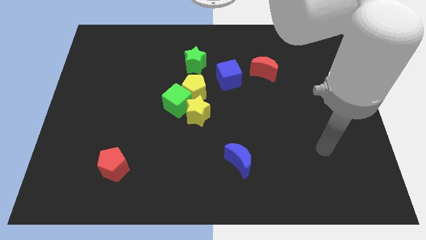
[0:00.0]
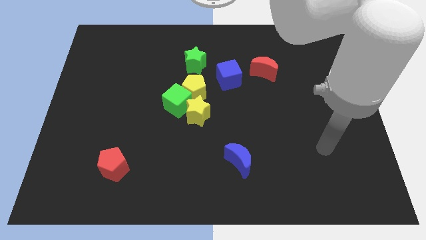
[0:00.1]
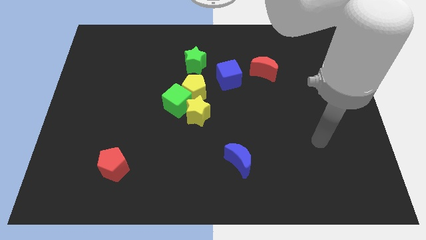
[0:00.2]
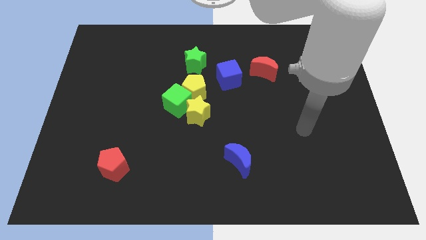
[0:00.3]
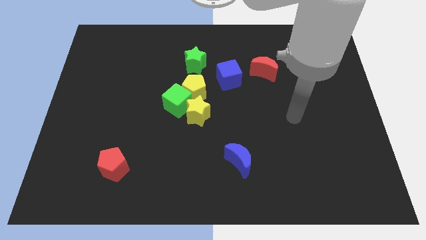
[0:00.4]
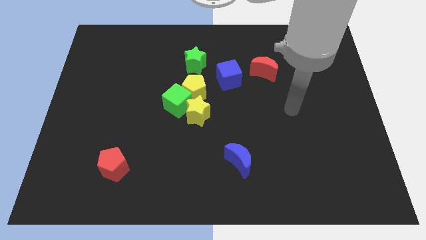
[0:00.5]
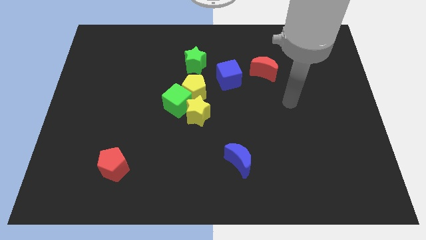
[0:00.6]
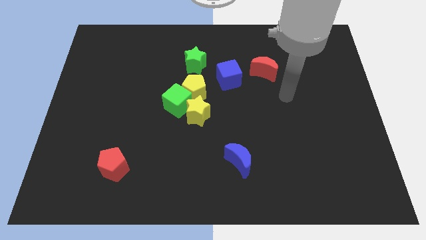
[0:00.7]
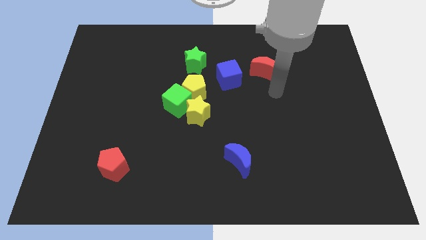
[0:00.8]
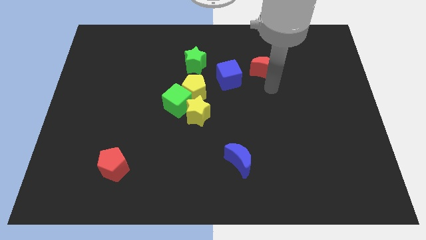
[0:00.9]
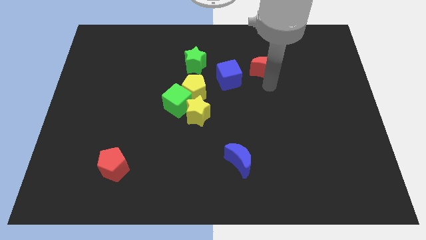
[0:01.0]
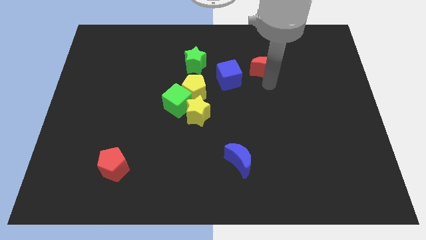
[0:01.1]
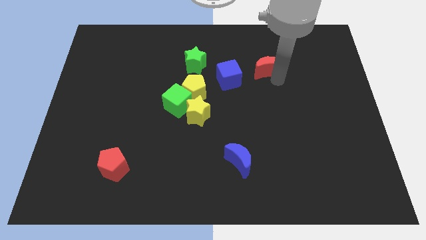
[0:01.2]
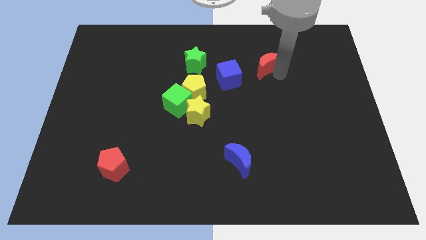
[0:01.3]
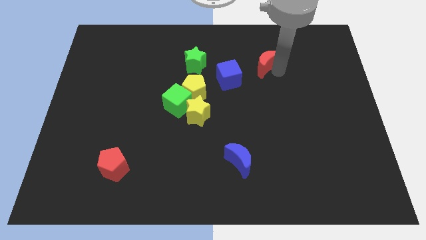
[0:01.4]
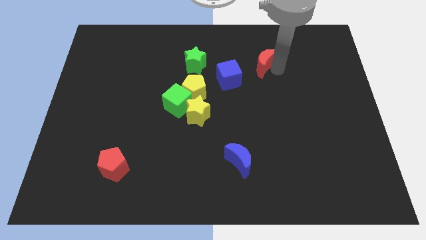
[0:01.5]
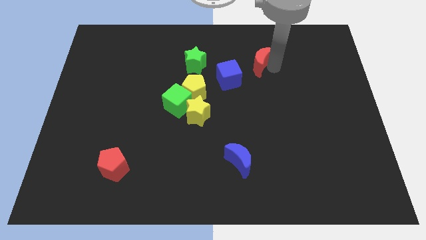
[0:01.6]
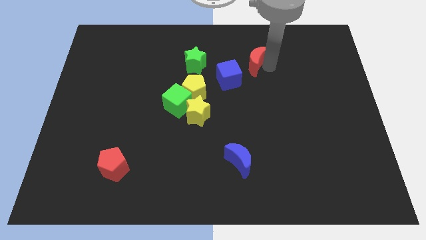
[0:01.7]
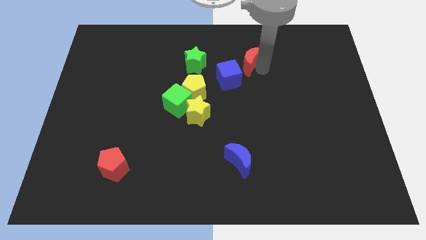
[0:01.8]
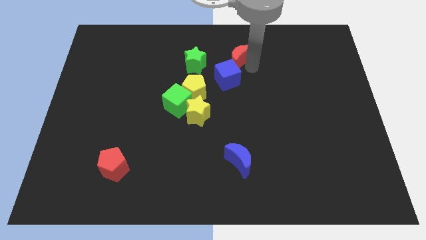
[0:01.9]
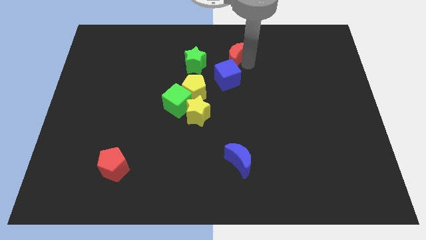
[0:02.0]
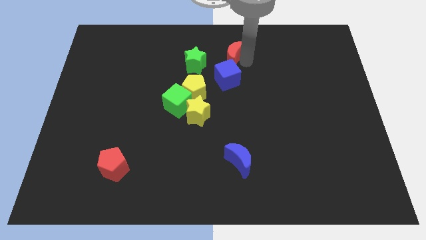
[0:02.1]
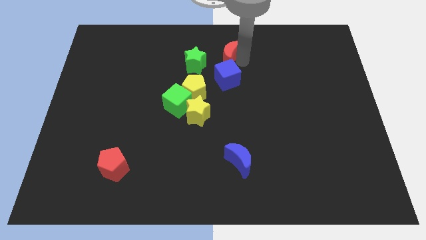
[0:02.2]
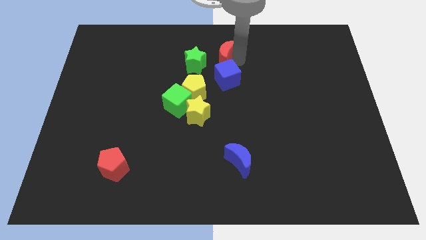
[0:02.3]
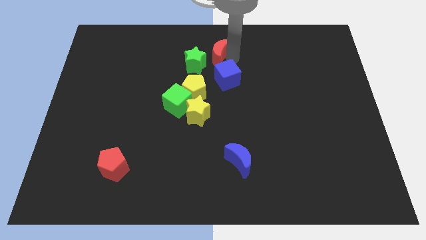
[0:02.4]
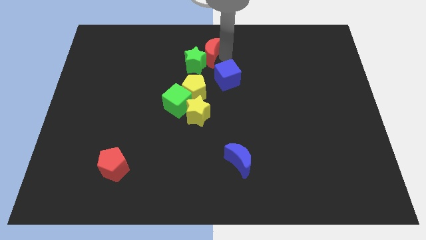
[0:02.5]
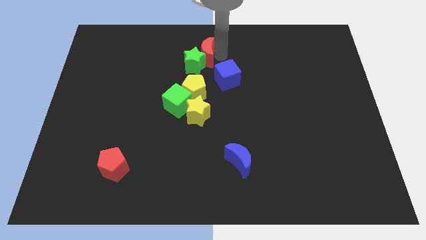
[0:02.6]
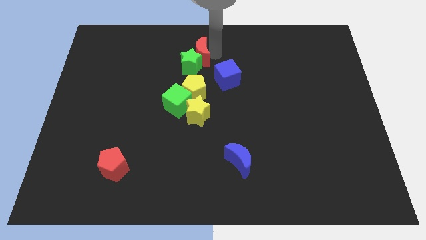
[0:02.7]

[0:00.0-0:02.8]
push the red moon next to the green star

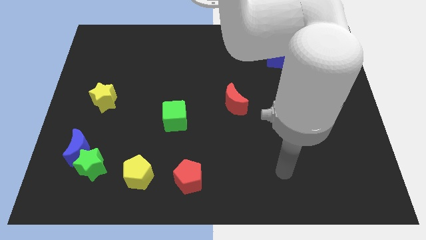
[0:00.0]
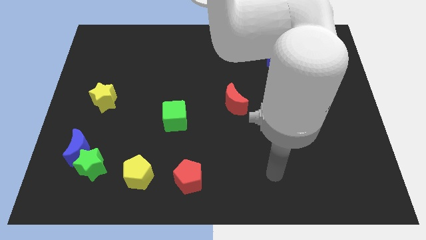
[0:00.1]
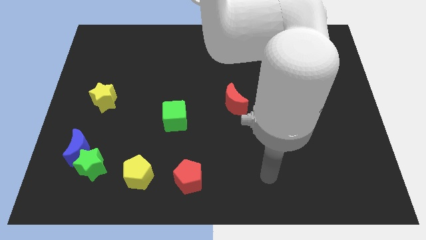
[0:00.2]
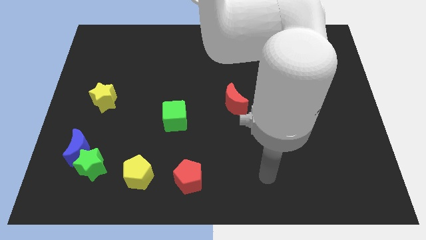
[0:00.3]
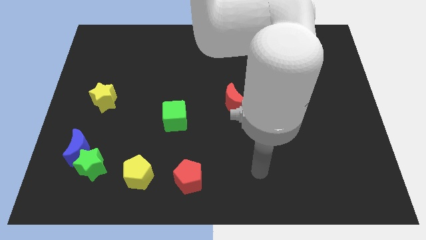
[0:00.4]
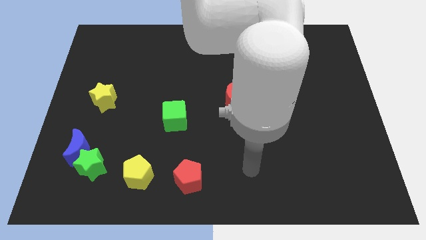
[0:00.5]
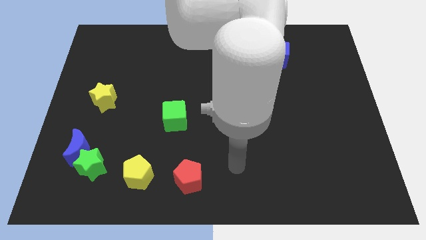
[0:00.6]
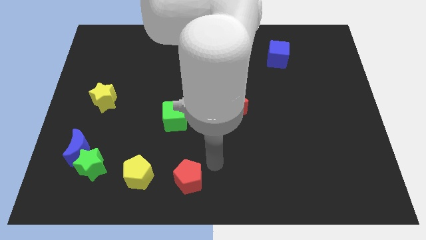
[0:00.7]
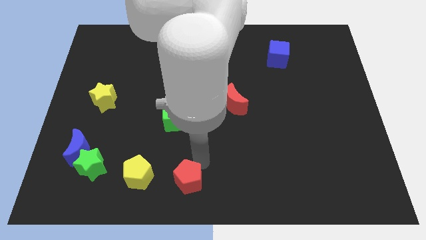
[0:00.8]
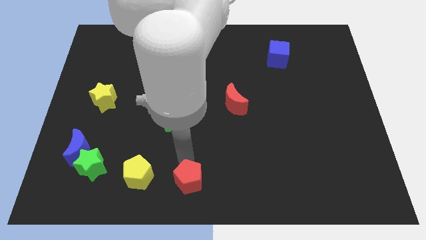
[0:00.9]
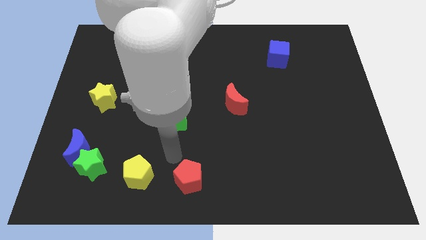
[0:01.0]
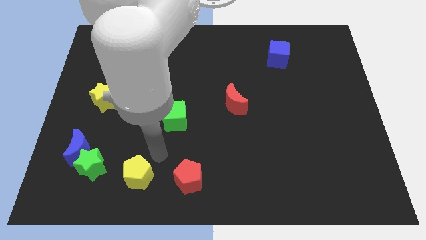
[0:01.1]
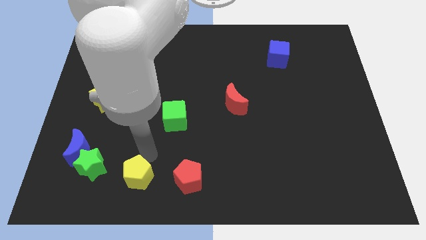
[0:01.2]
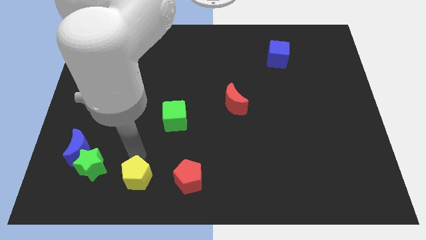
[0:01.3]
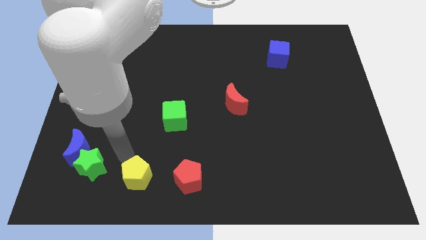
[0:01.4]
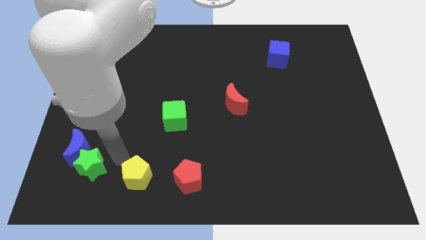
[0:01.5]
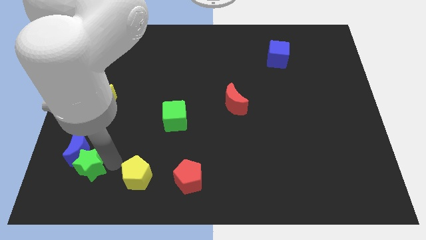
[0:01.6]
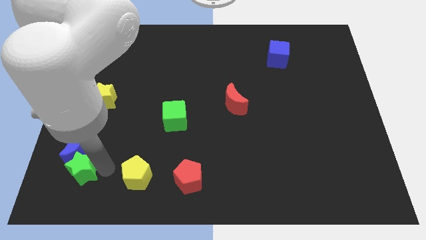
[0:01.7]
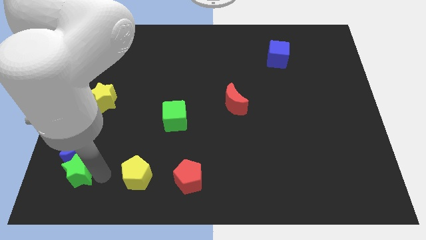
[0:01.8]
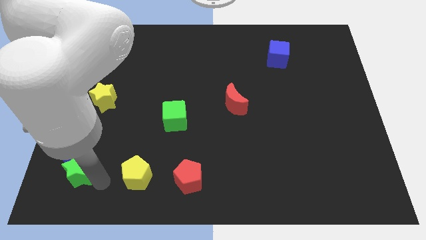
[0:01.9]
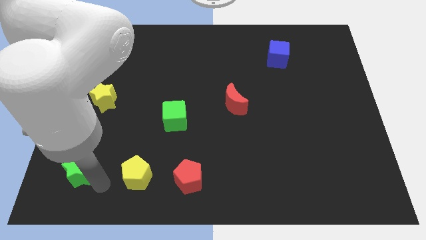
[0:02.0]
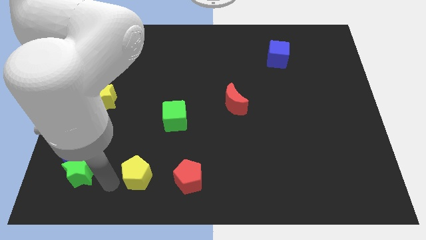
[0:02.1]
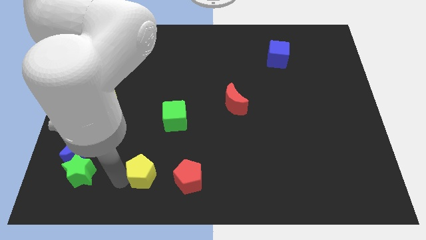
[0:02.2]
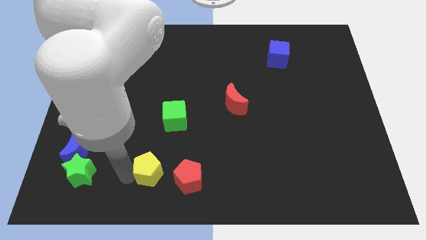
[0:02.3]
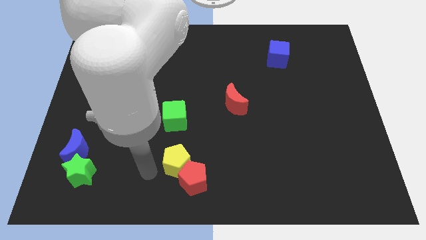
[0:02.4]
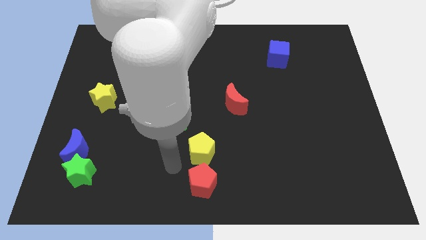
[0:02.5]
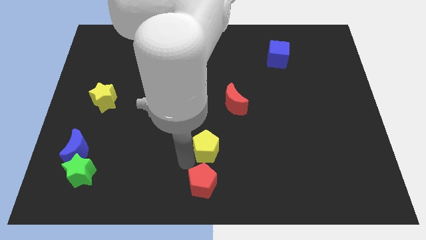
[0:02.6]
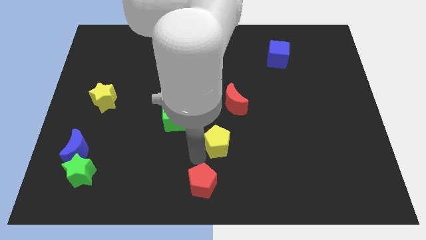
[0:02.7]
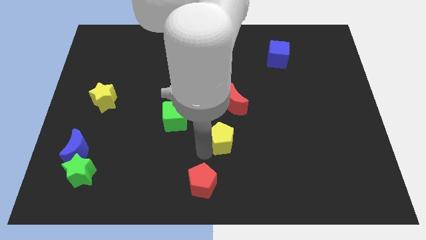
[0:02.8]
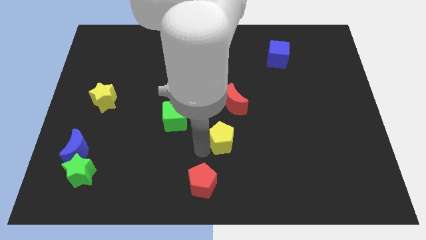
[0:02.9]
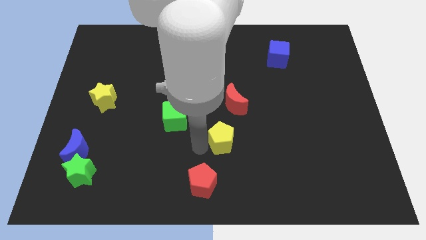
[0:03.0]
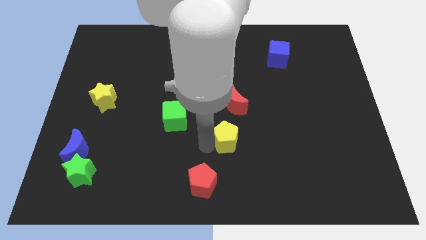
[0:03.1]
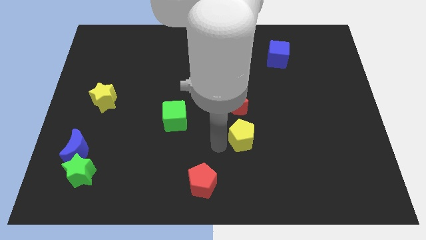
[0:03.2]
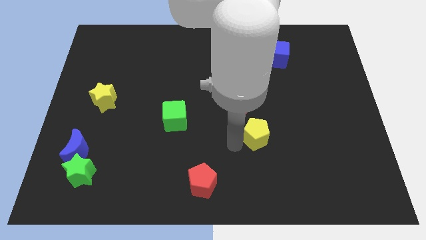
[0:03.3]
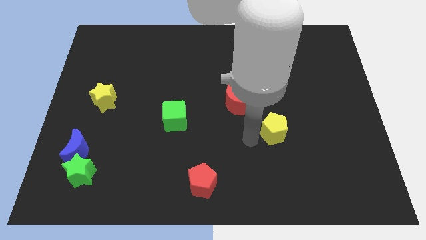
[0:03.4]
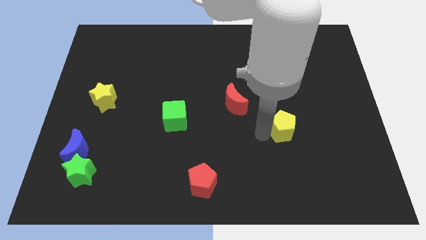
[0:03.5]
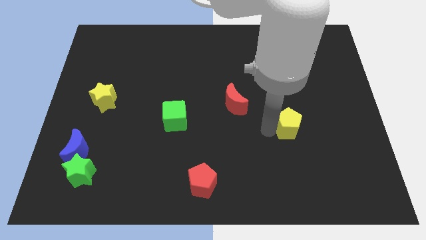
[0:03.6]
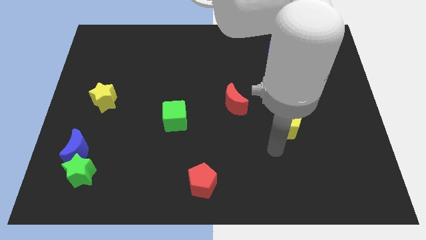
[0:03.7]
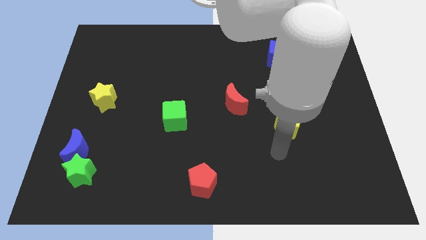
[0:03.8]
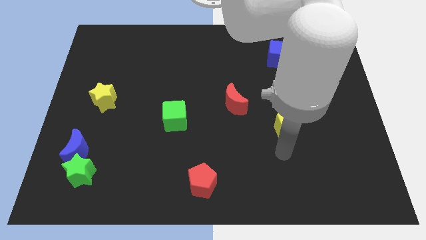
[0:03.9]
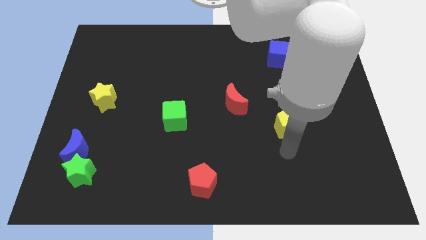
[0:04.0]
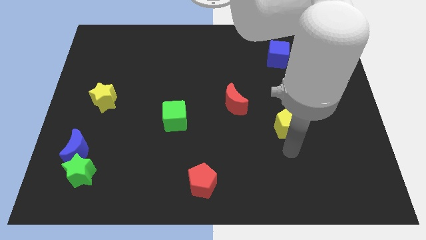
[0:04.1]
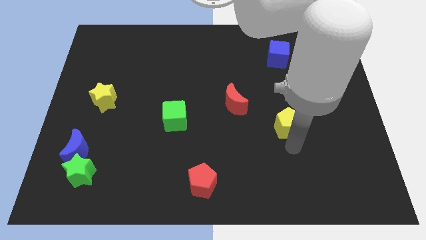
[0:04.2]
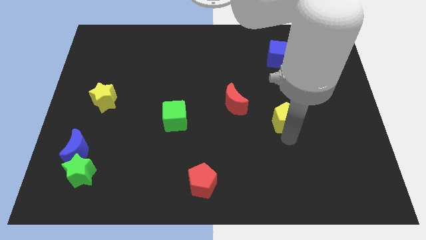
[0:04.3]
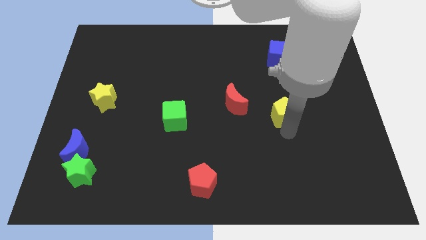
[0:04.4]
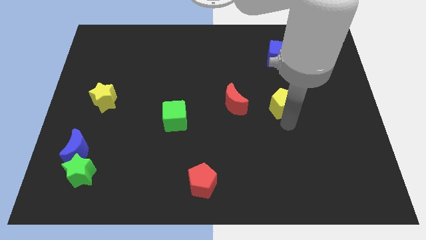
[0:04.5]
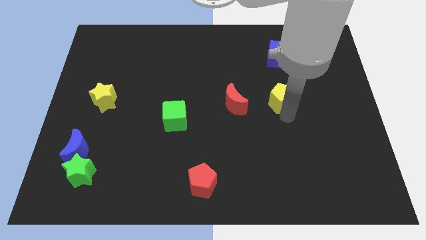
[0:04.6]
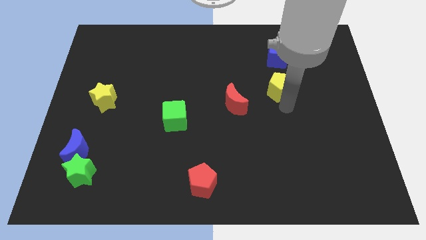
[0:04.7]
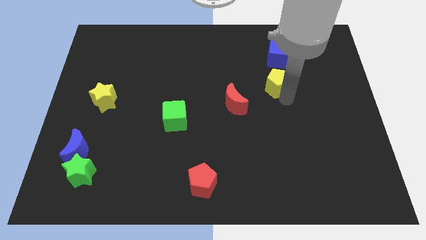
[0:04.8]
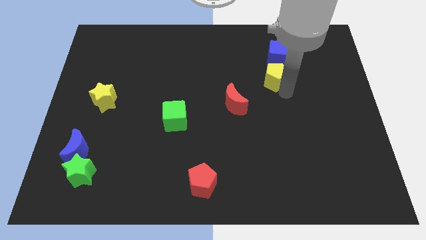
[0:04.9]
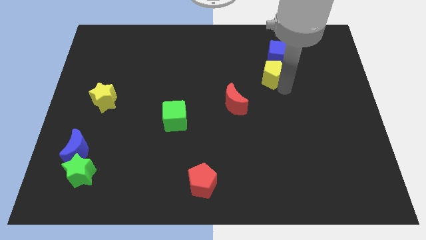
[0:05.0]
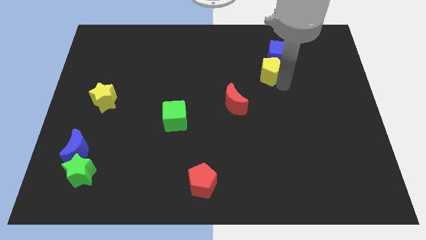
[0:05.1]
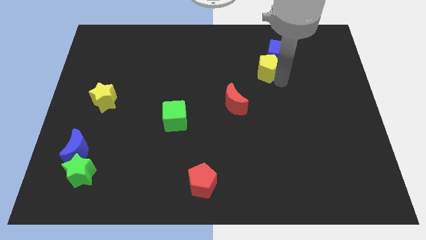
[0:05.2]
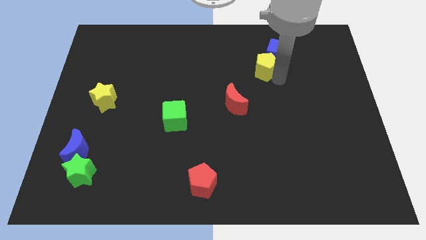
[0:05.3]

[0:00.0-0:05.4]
put the yellow pentagon close to the blue cube

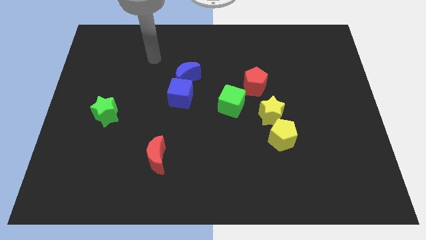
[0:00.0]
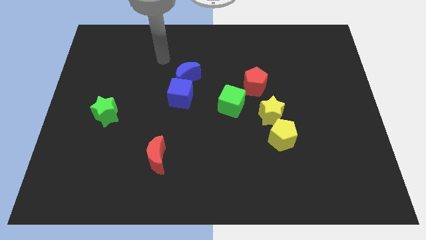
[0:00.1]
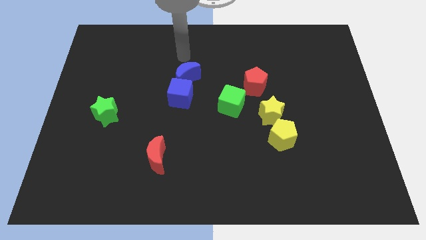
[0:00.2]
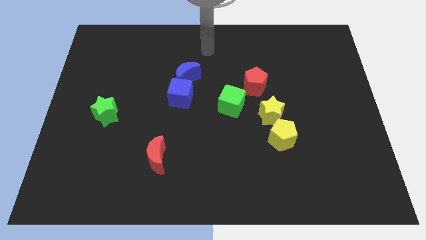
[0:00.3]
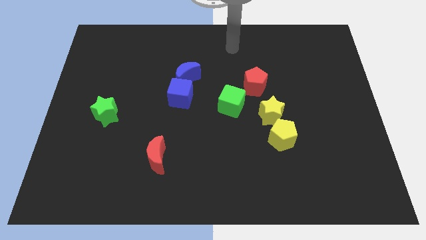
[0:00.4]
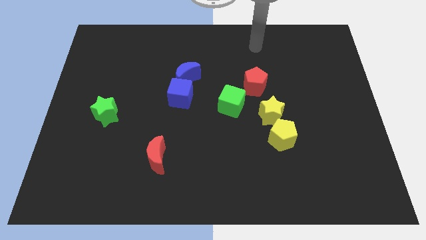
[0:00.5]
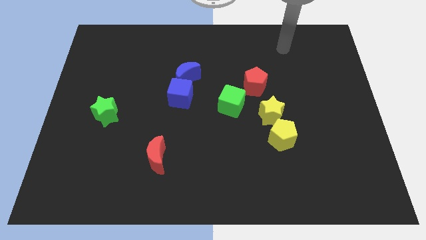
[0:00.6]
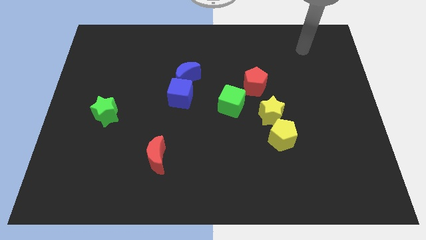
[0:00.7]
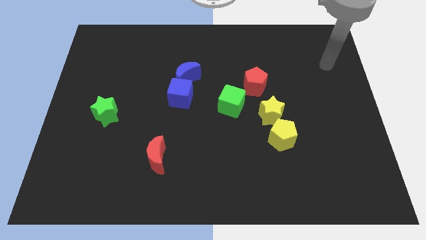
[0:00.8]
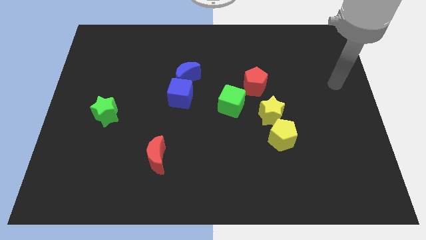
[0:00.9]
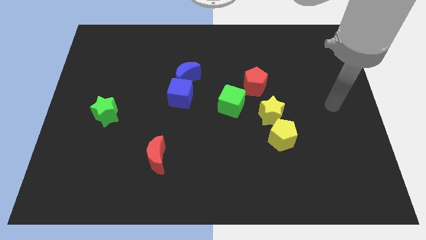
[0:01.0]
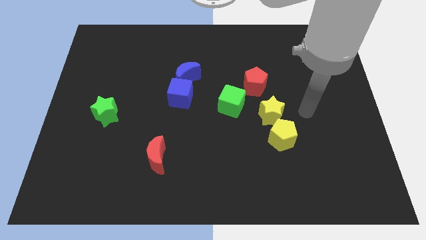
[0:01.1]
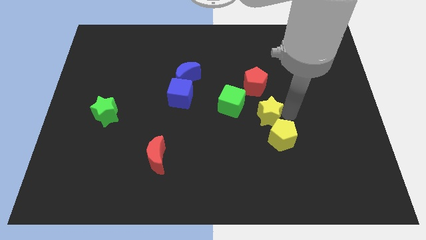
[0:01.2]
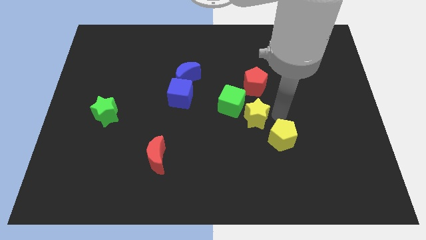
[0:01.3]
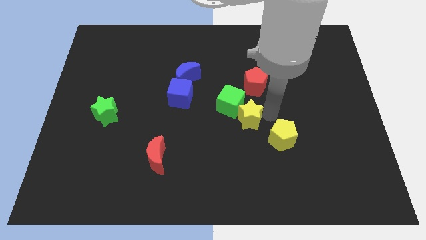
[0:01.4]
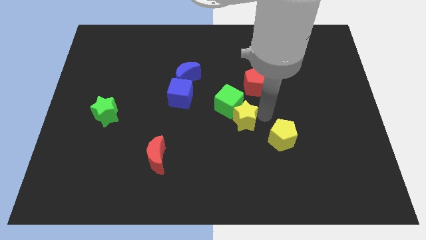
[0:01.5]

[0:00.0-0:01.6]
push the yellow star next to the green cube
